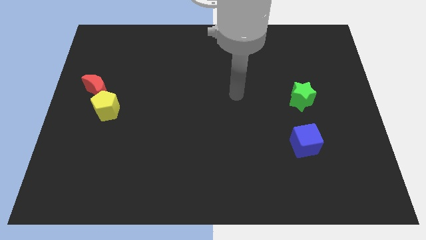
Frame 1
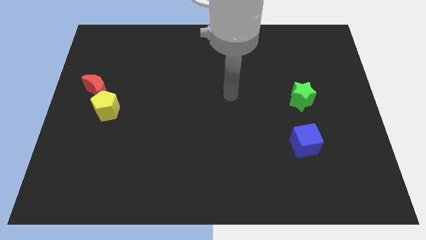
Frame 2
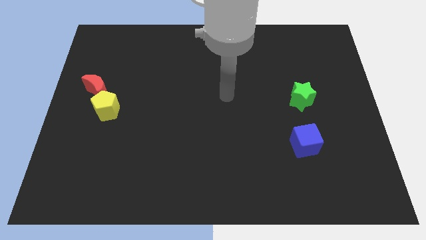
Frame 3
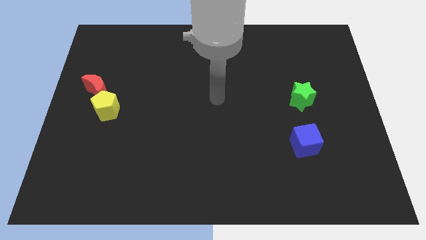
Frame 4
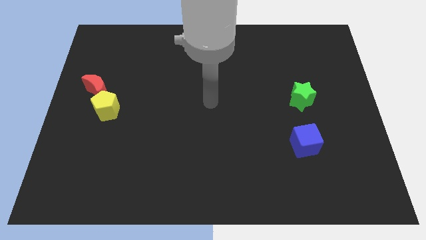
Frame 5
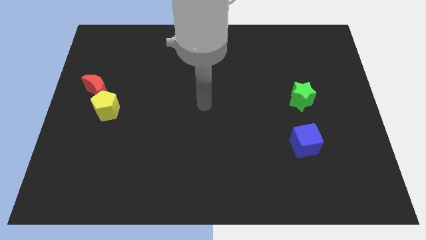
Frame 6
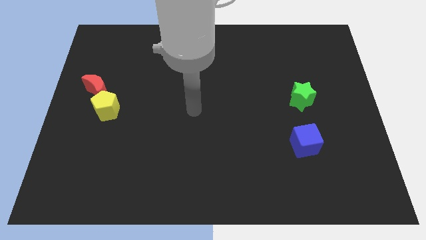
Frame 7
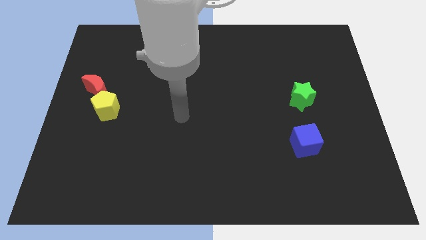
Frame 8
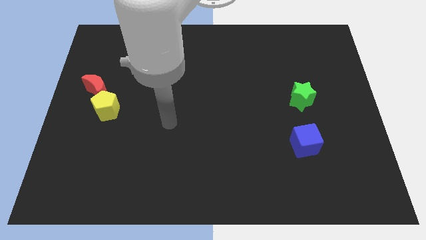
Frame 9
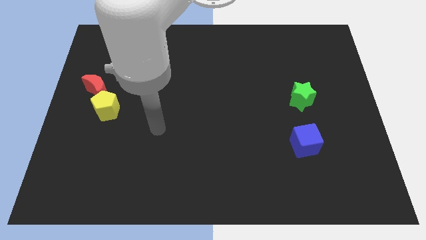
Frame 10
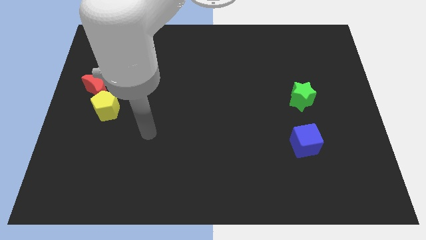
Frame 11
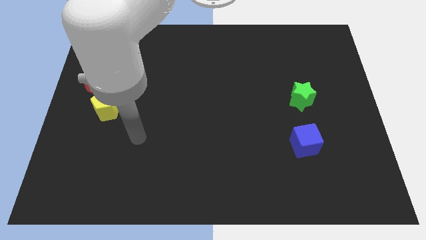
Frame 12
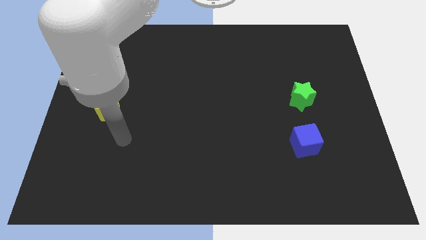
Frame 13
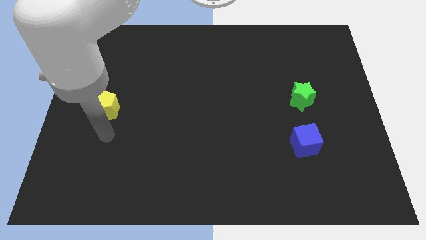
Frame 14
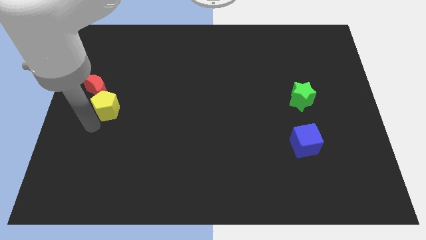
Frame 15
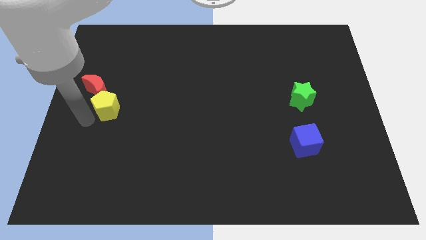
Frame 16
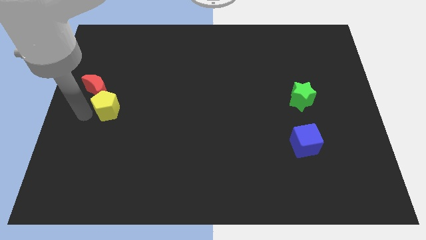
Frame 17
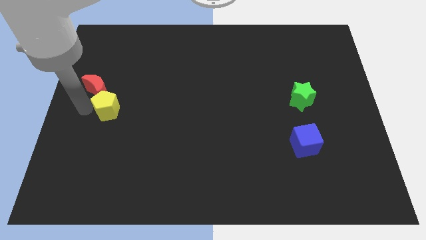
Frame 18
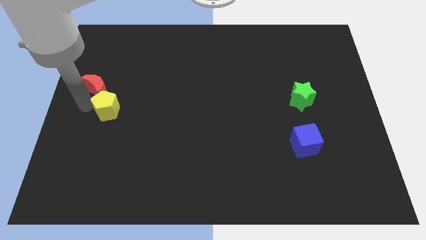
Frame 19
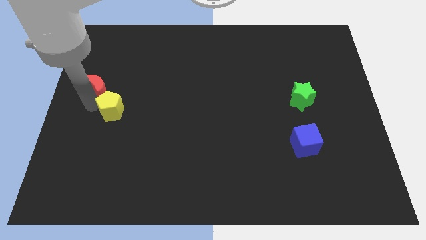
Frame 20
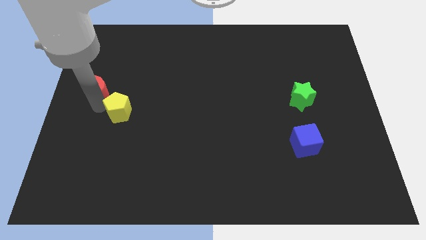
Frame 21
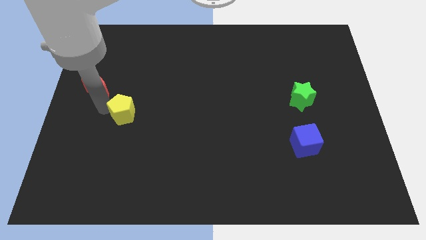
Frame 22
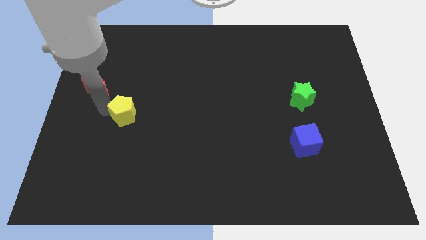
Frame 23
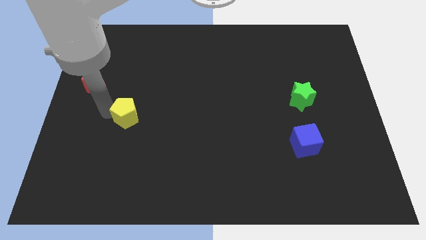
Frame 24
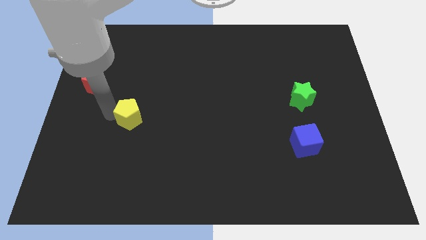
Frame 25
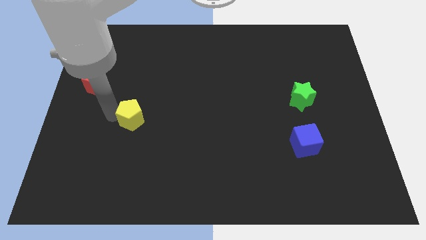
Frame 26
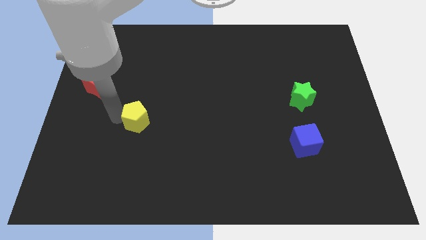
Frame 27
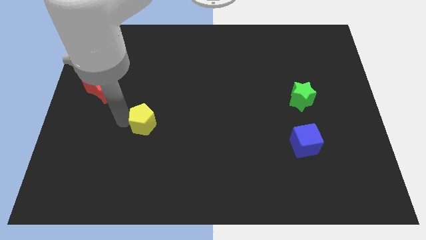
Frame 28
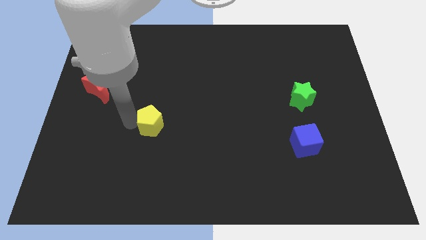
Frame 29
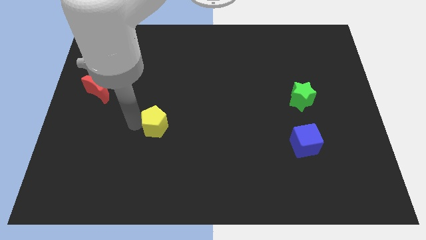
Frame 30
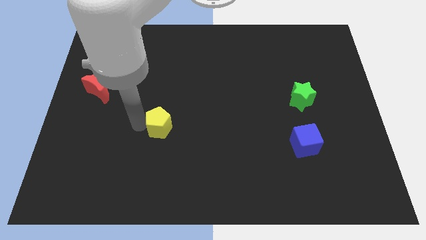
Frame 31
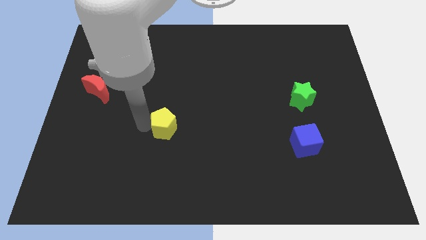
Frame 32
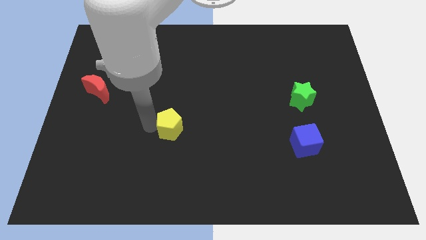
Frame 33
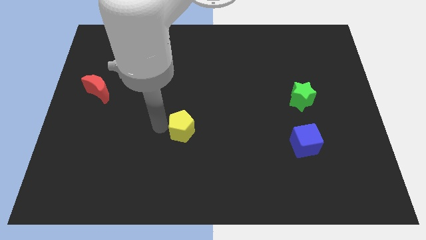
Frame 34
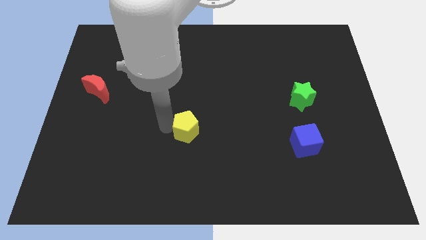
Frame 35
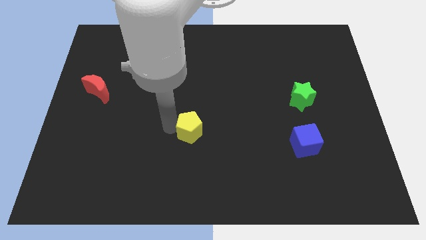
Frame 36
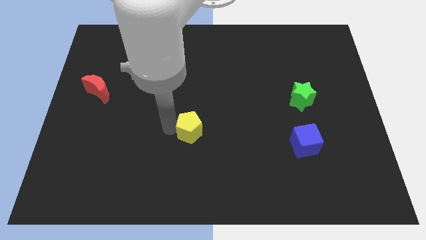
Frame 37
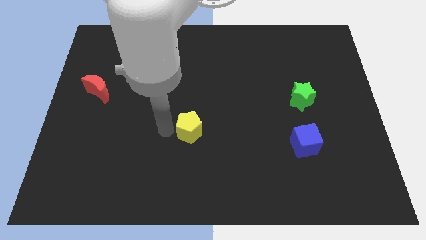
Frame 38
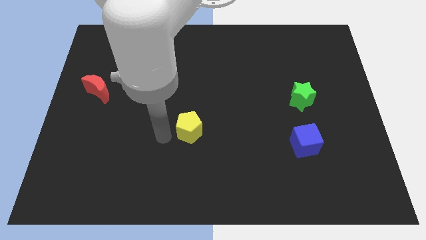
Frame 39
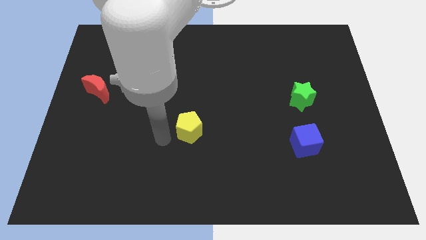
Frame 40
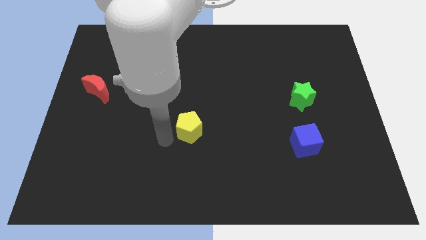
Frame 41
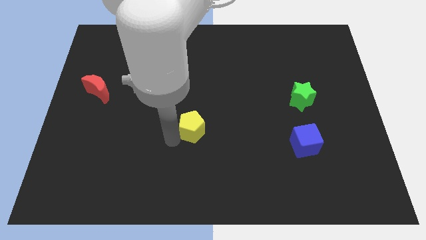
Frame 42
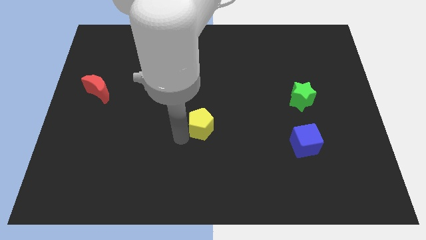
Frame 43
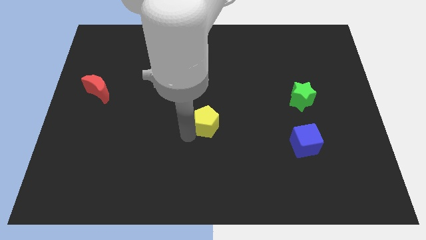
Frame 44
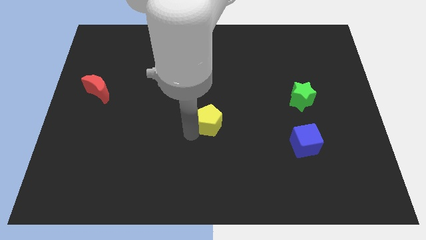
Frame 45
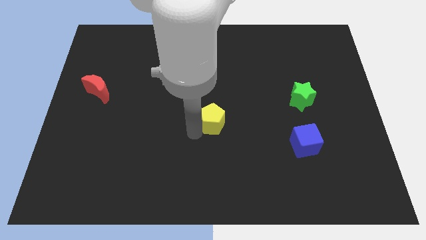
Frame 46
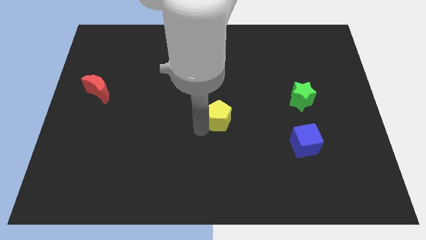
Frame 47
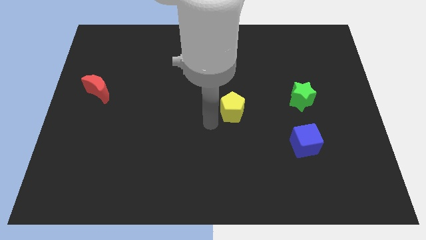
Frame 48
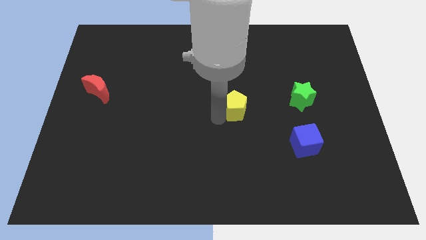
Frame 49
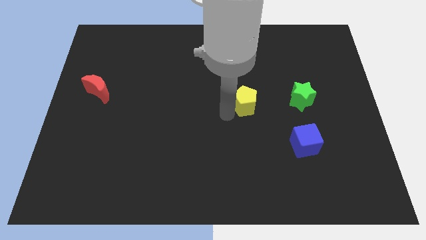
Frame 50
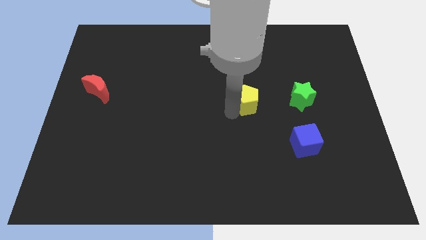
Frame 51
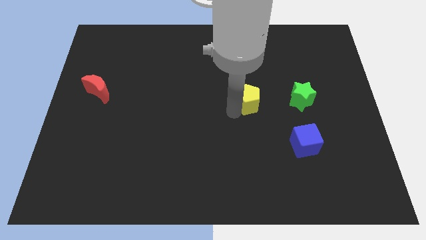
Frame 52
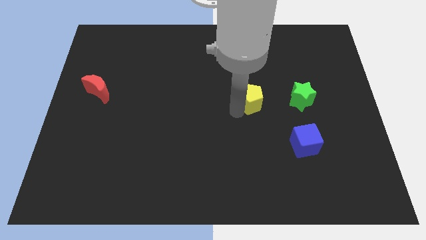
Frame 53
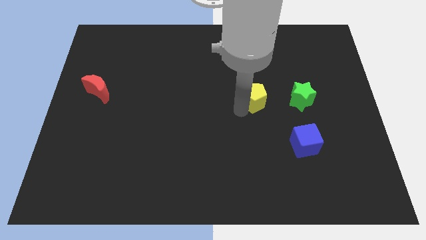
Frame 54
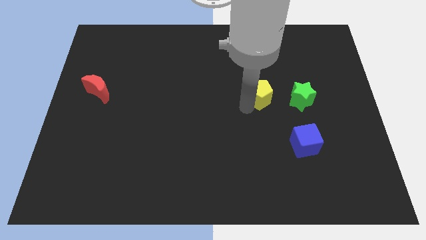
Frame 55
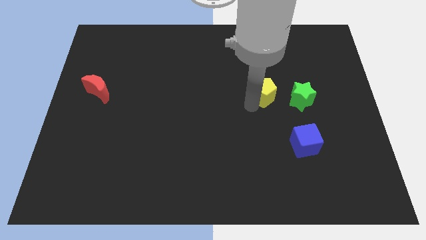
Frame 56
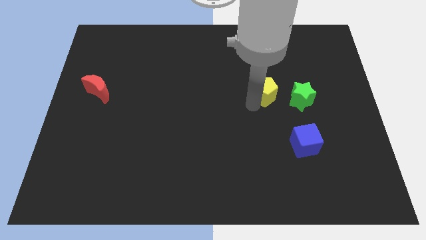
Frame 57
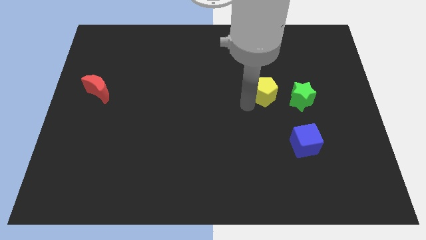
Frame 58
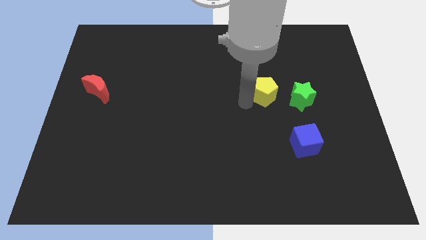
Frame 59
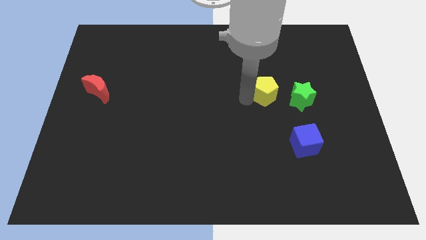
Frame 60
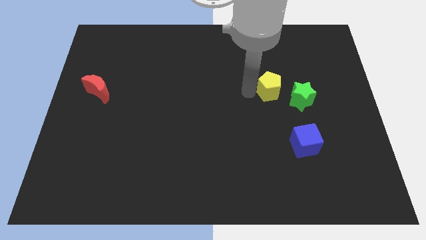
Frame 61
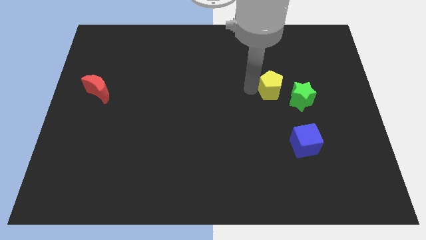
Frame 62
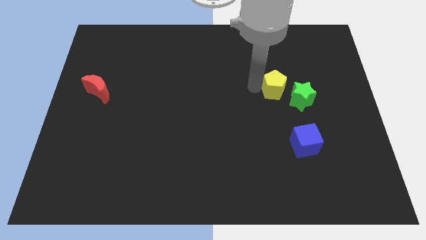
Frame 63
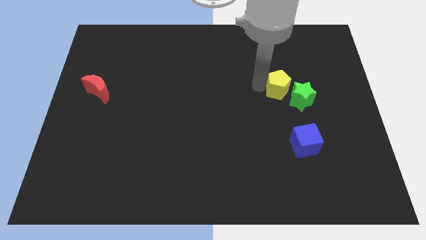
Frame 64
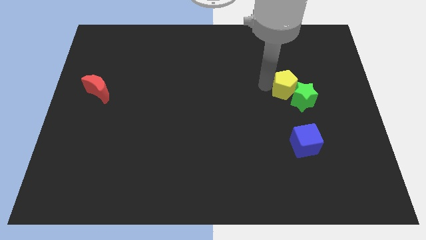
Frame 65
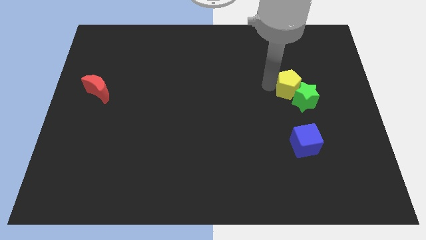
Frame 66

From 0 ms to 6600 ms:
move the pentagon next to the green block

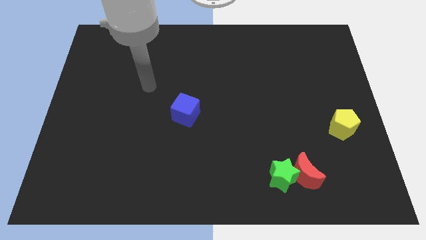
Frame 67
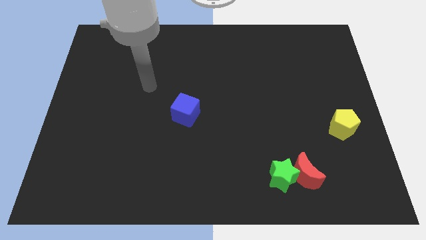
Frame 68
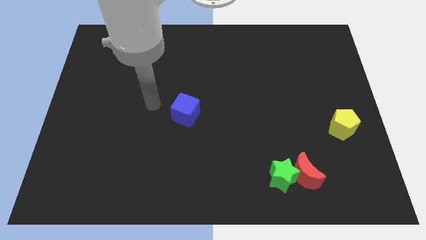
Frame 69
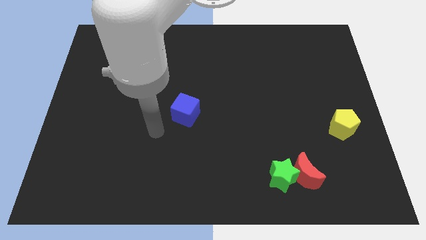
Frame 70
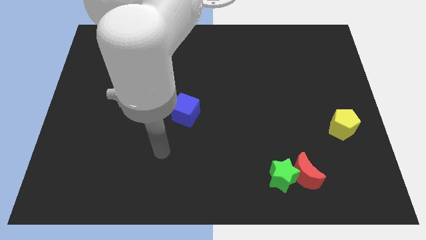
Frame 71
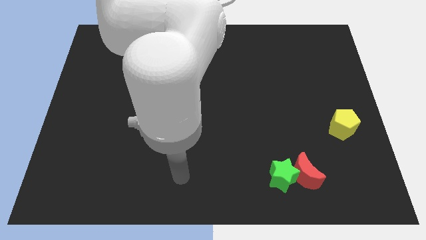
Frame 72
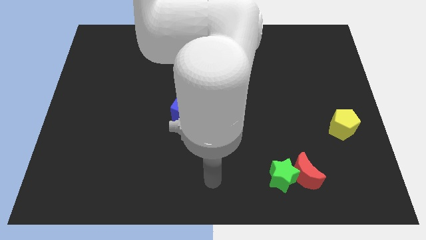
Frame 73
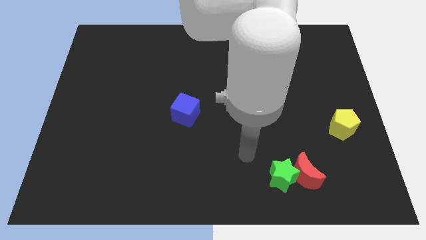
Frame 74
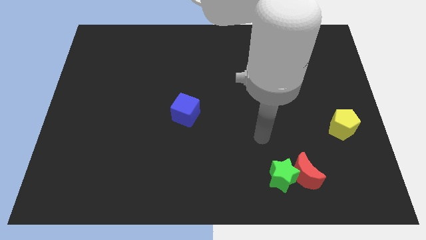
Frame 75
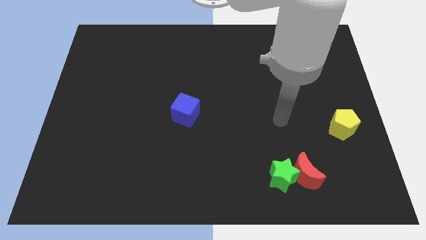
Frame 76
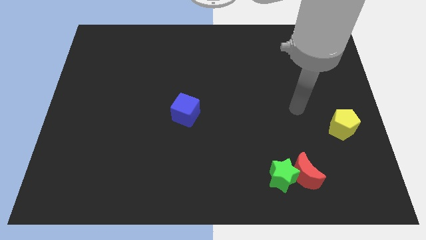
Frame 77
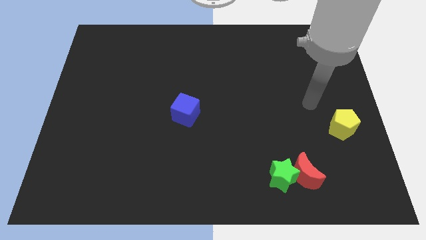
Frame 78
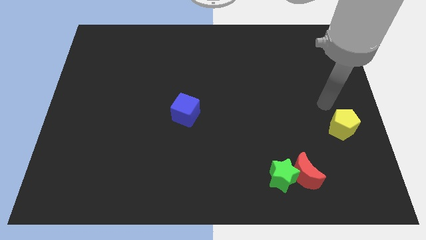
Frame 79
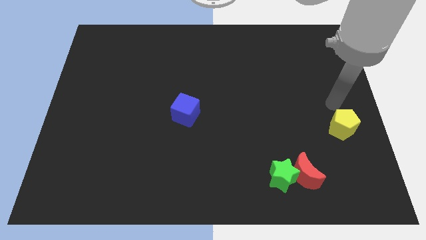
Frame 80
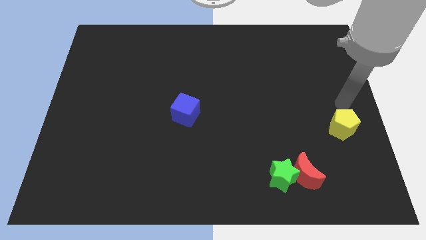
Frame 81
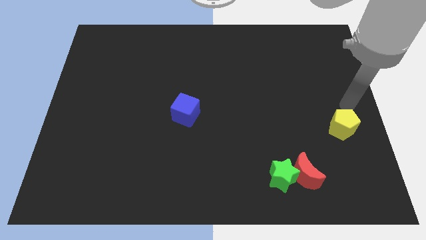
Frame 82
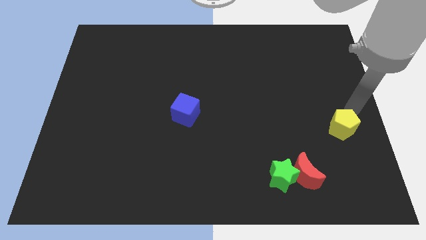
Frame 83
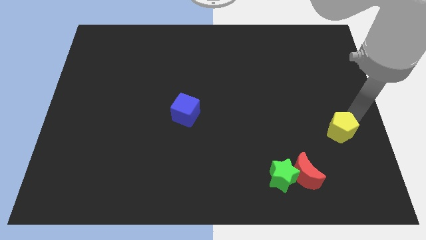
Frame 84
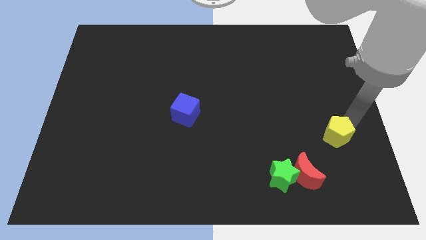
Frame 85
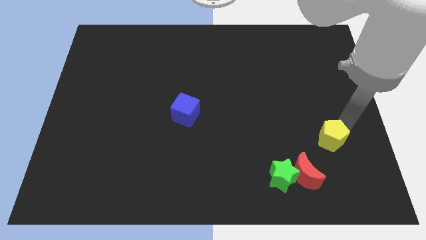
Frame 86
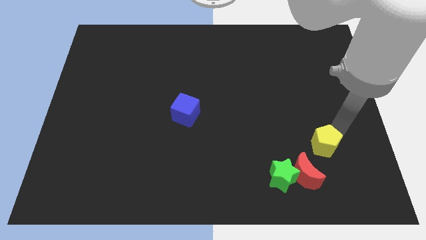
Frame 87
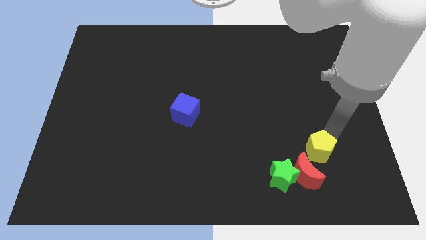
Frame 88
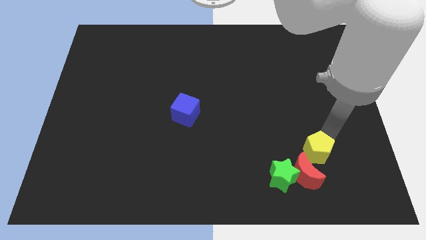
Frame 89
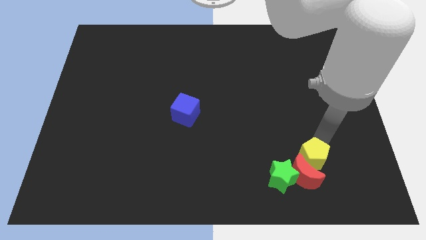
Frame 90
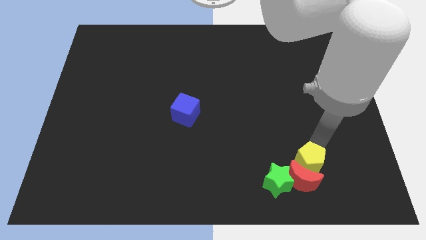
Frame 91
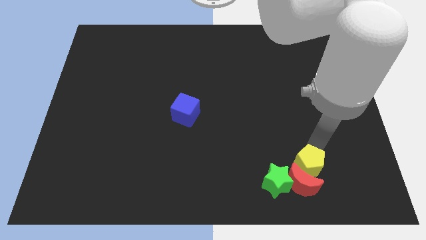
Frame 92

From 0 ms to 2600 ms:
push the yellow block towards the red block
